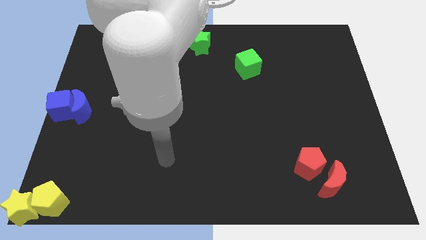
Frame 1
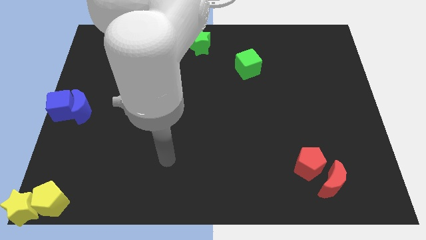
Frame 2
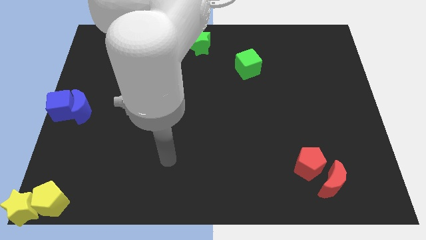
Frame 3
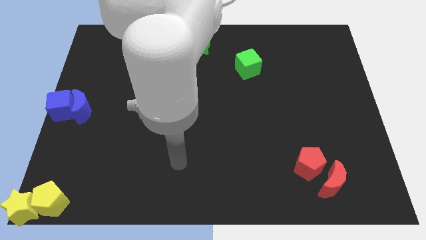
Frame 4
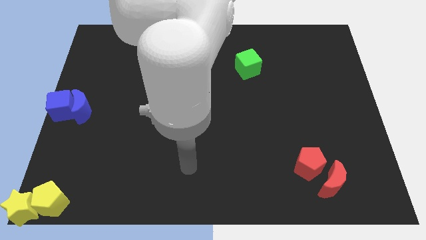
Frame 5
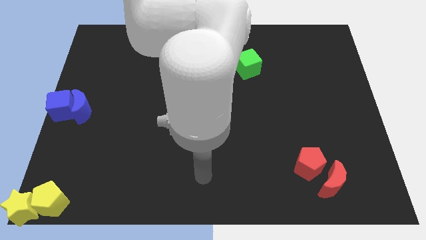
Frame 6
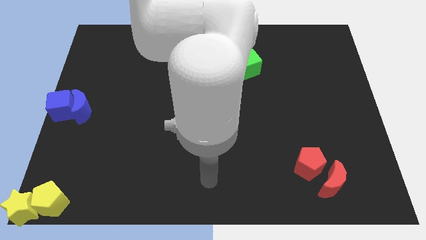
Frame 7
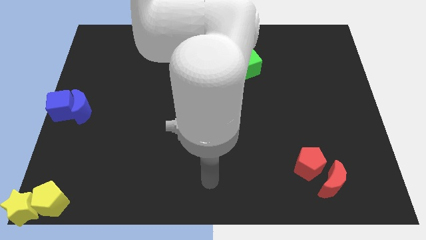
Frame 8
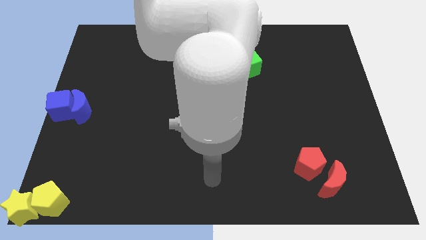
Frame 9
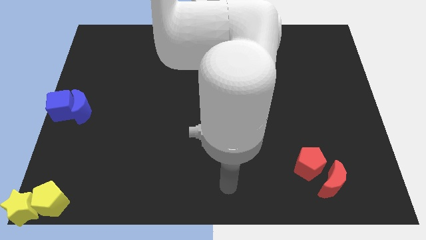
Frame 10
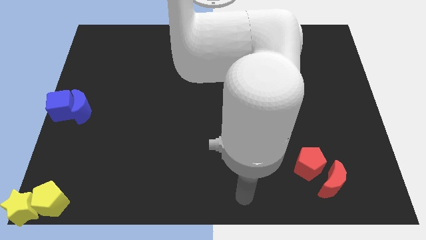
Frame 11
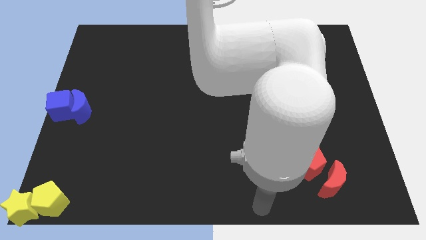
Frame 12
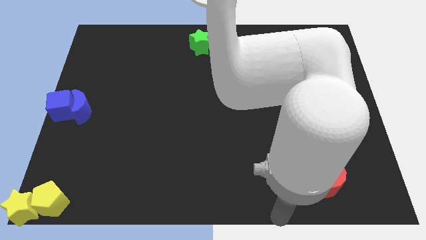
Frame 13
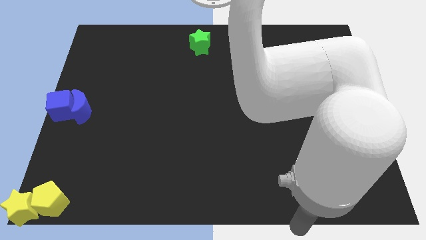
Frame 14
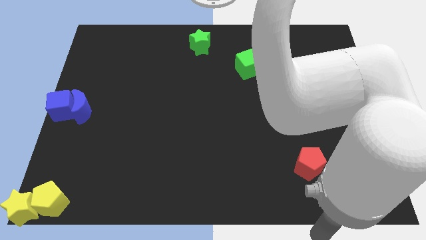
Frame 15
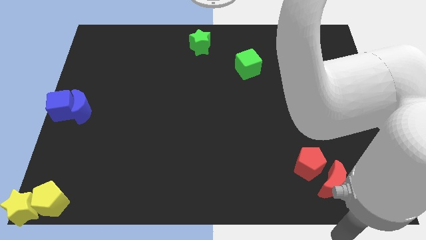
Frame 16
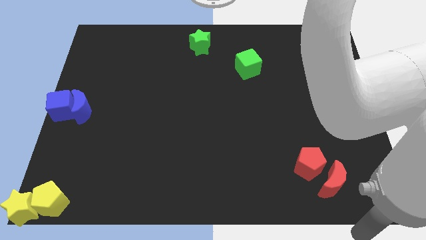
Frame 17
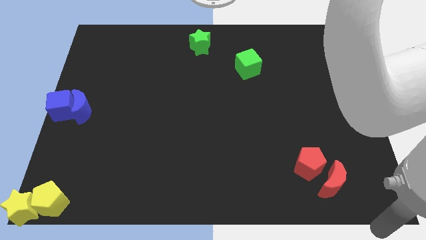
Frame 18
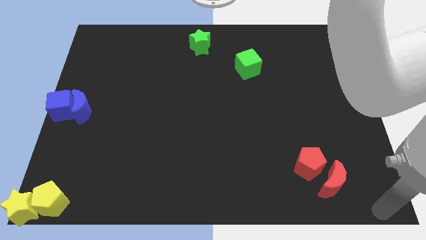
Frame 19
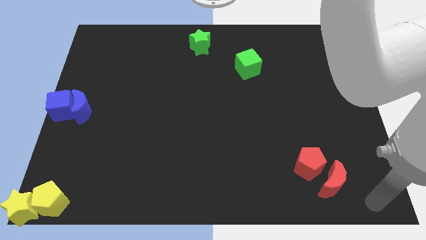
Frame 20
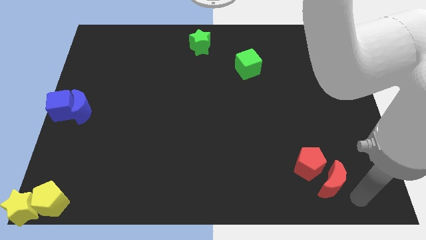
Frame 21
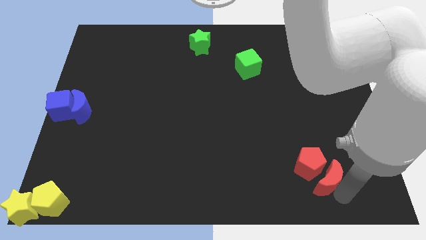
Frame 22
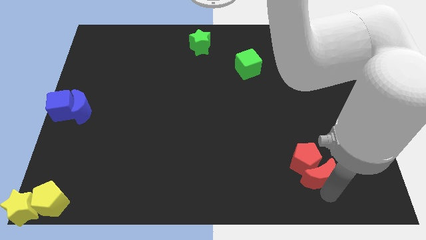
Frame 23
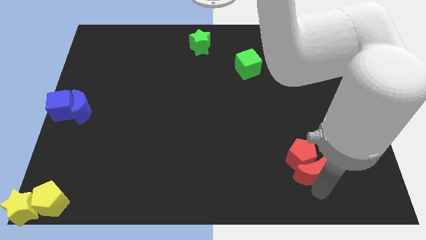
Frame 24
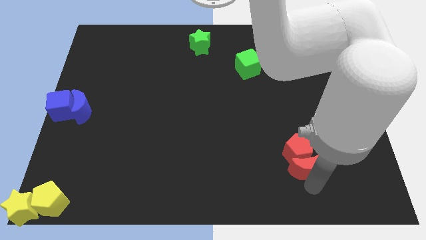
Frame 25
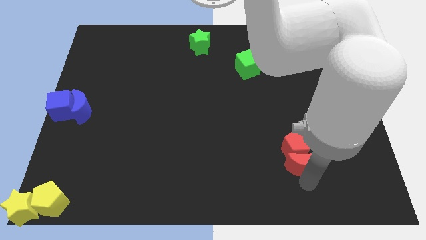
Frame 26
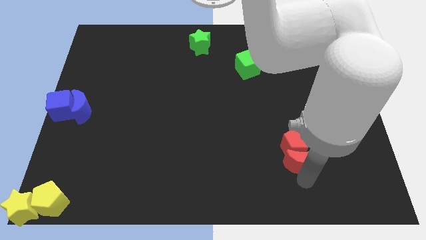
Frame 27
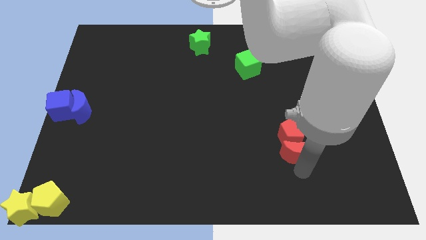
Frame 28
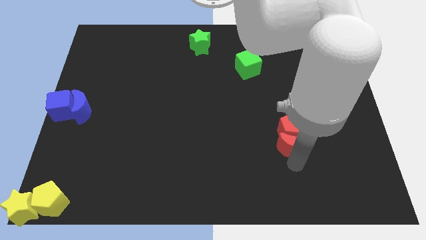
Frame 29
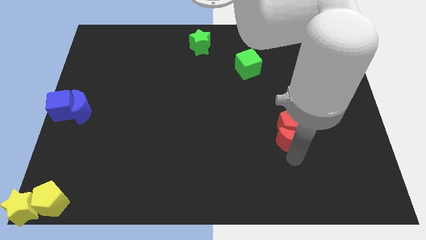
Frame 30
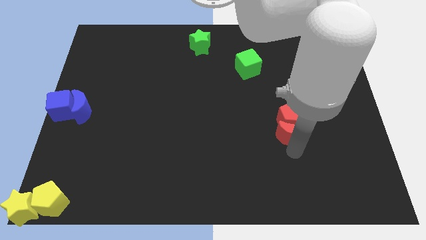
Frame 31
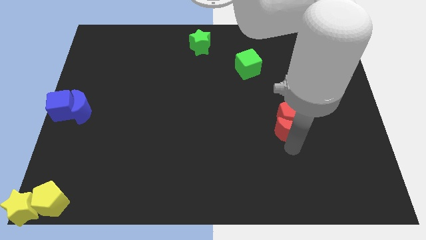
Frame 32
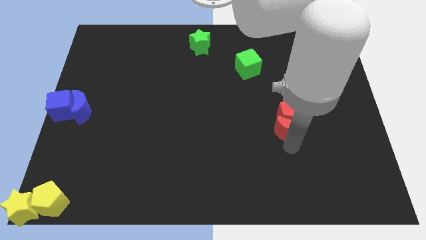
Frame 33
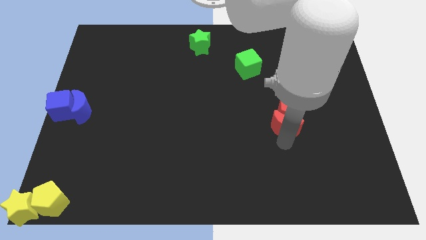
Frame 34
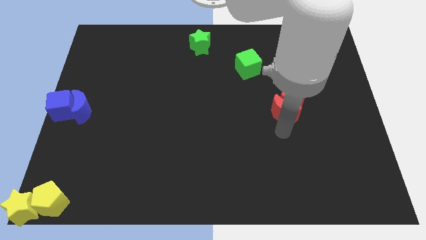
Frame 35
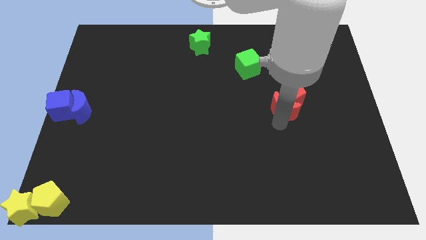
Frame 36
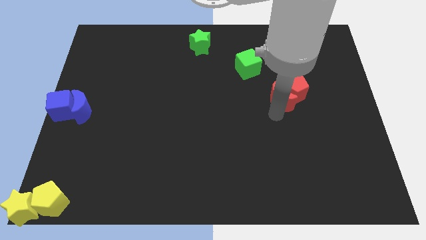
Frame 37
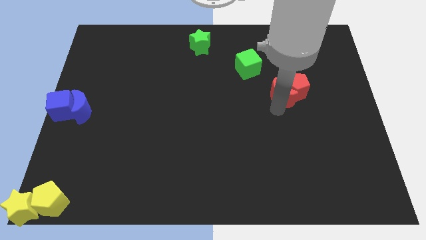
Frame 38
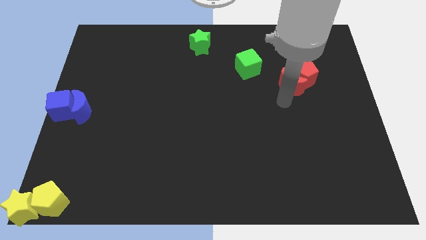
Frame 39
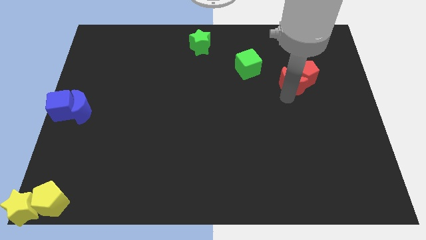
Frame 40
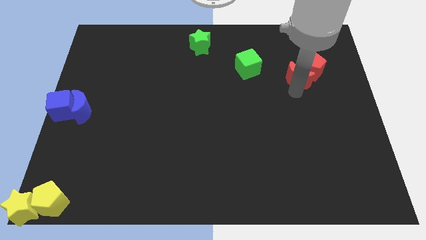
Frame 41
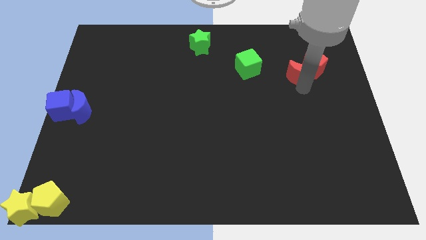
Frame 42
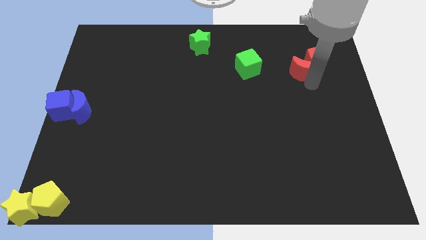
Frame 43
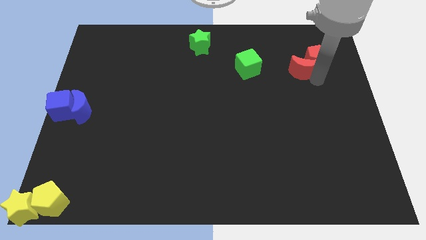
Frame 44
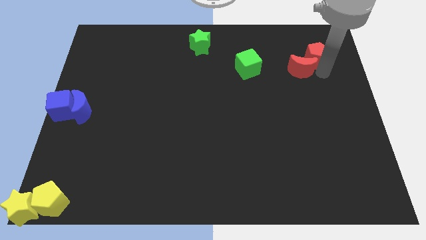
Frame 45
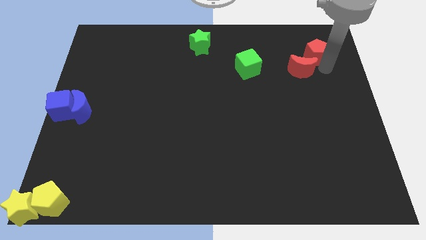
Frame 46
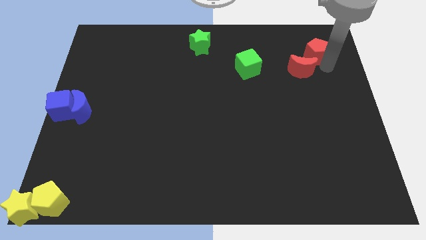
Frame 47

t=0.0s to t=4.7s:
push the red blocks to the top of the board

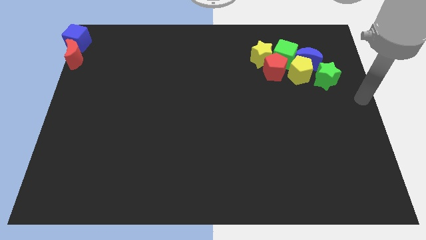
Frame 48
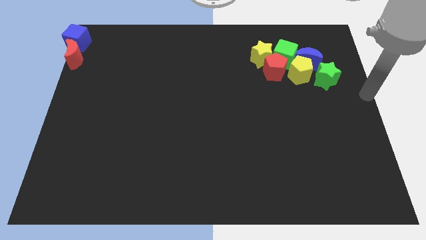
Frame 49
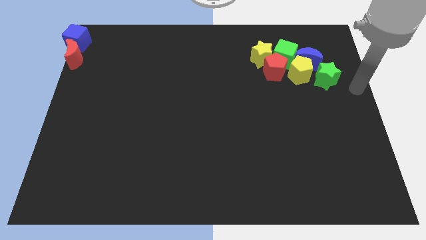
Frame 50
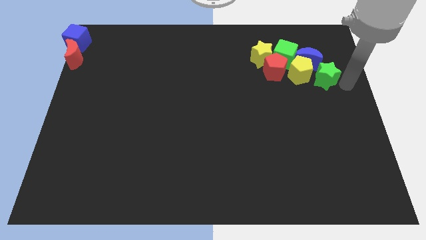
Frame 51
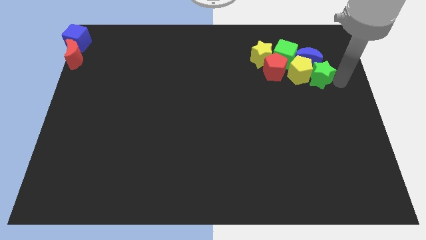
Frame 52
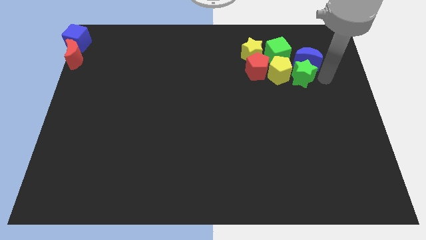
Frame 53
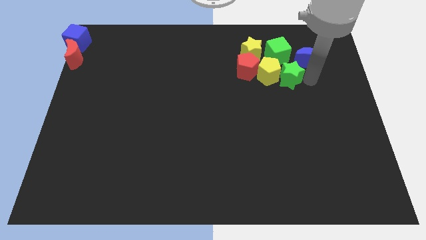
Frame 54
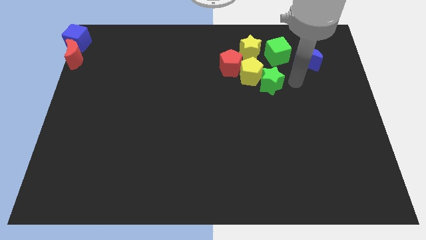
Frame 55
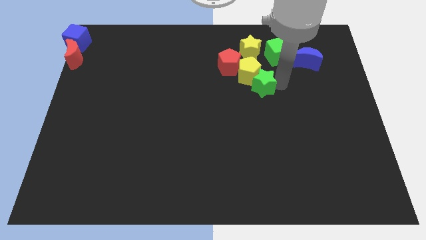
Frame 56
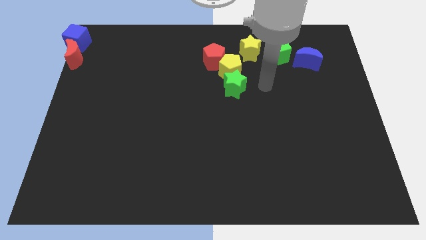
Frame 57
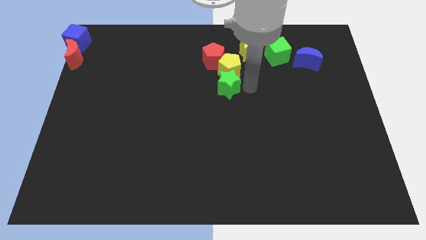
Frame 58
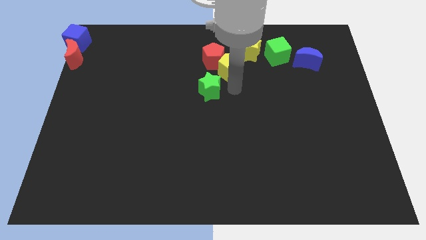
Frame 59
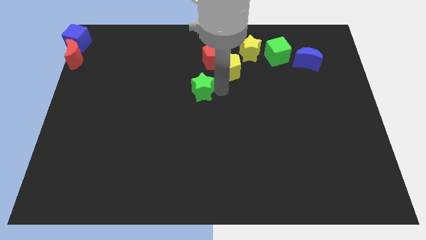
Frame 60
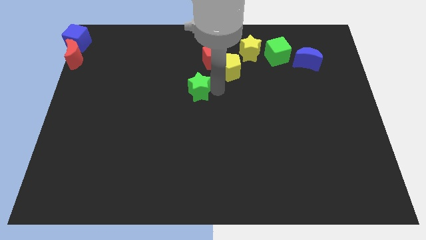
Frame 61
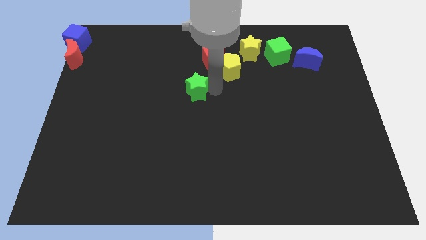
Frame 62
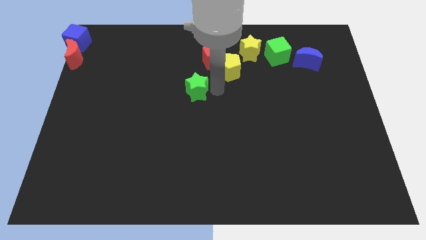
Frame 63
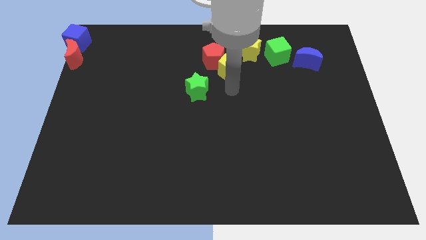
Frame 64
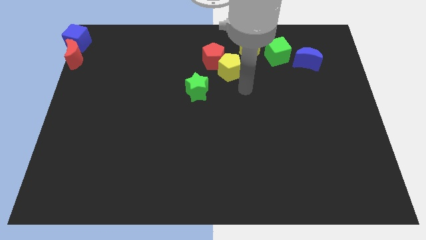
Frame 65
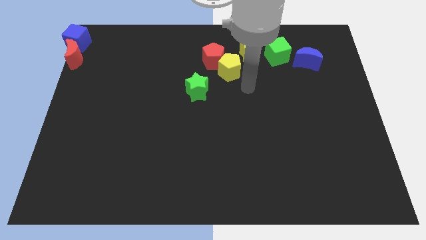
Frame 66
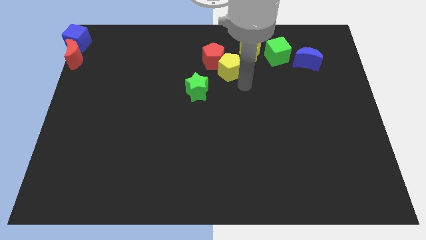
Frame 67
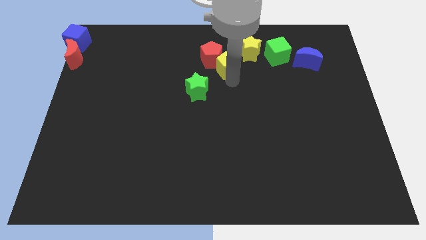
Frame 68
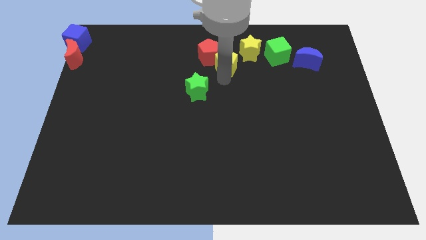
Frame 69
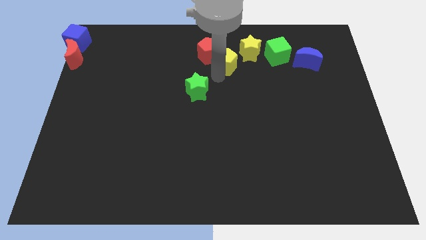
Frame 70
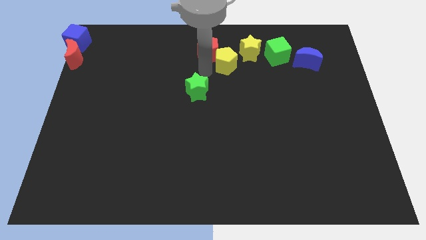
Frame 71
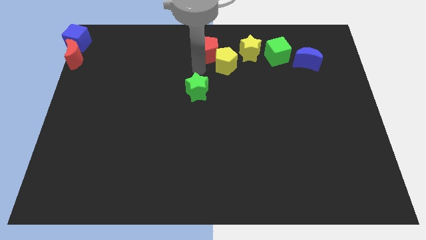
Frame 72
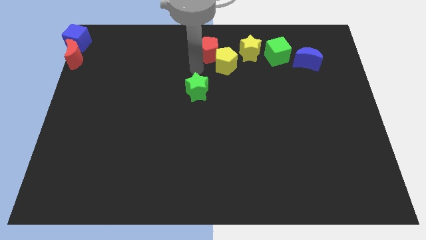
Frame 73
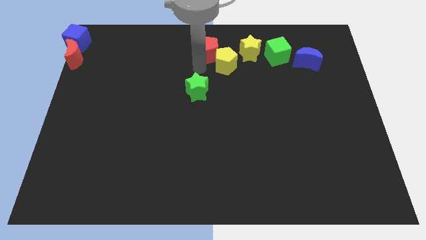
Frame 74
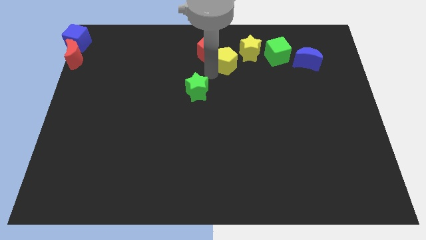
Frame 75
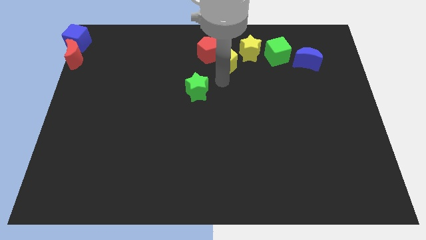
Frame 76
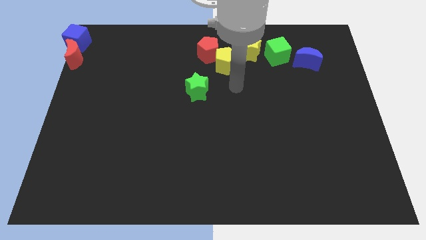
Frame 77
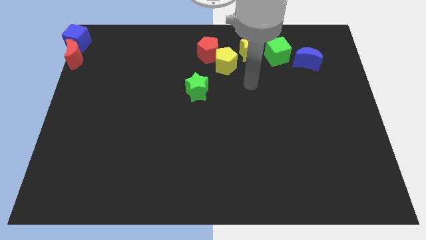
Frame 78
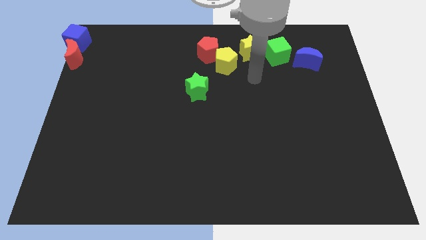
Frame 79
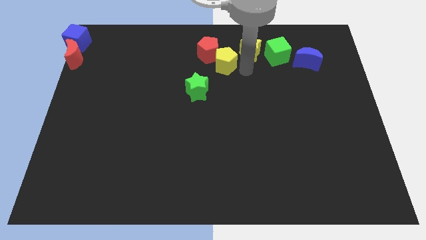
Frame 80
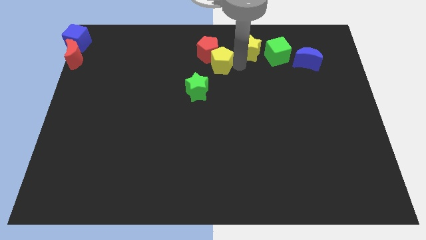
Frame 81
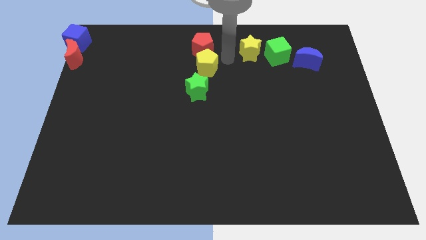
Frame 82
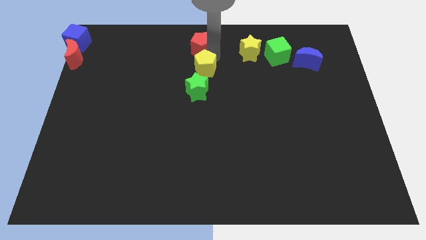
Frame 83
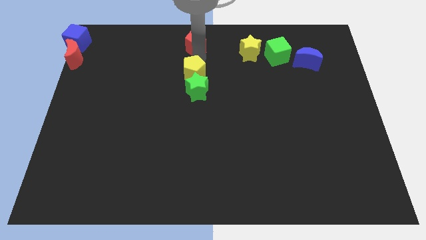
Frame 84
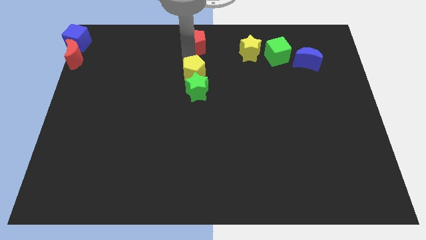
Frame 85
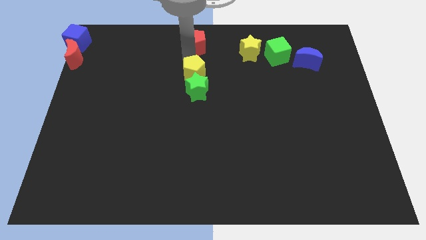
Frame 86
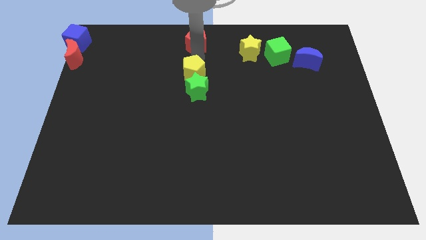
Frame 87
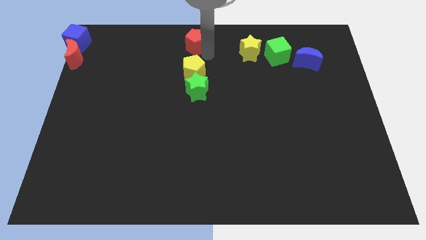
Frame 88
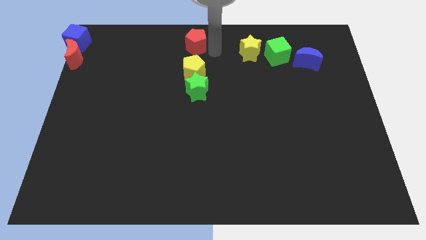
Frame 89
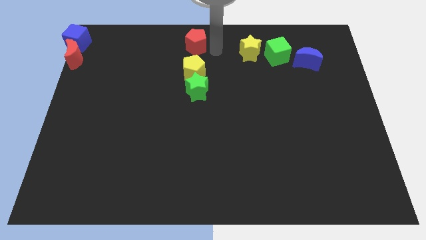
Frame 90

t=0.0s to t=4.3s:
form a vertical line with green star yellow pentagon and red pentagon at the top center of the board

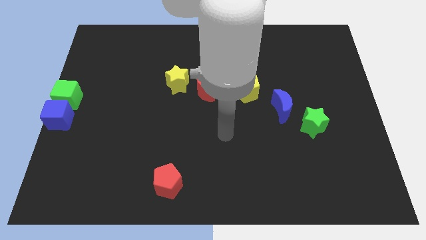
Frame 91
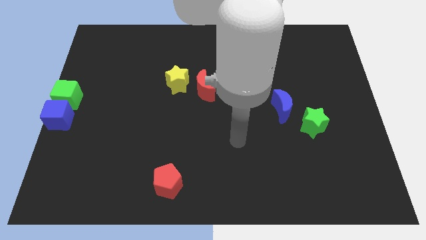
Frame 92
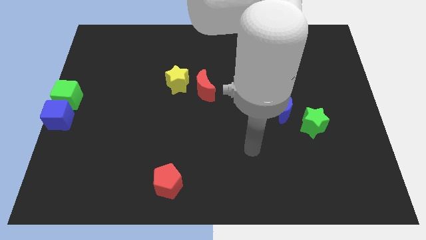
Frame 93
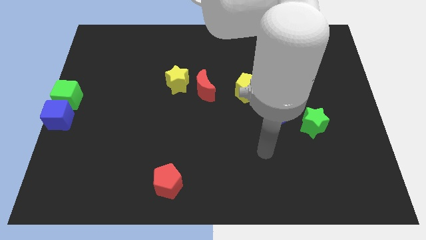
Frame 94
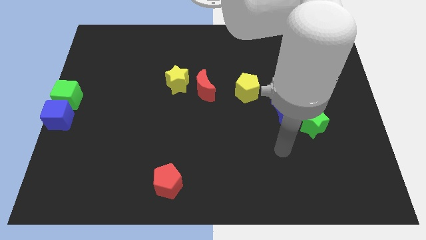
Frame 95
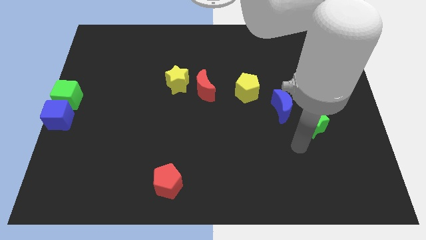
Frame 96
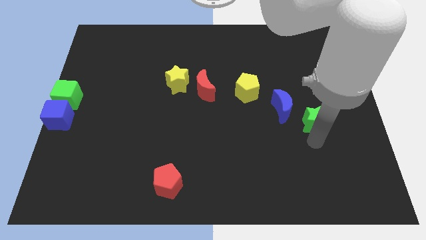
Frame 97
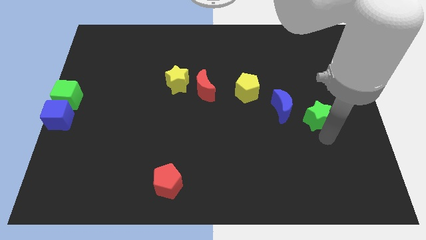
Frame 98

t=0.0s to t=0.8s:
move the arm towards the bottom of the green star
